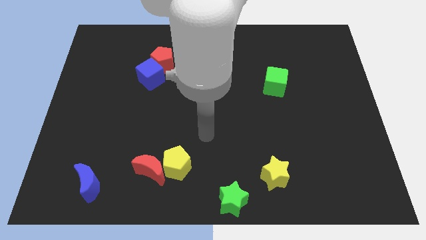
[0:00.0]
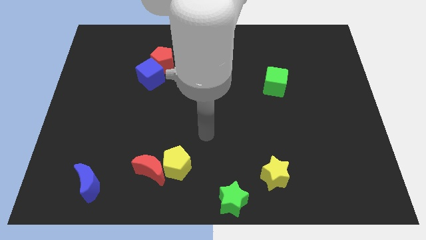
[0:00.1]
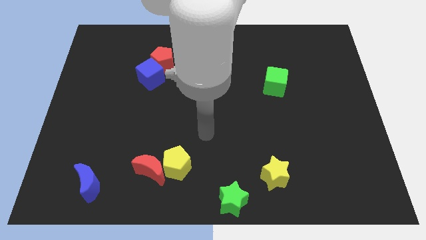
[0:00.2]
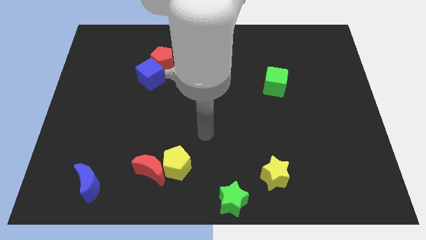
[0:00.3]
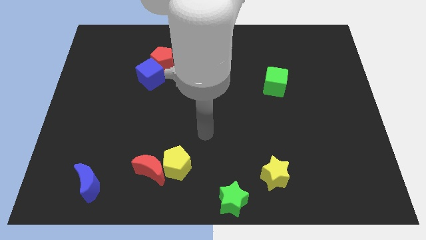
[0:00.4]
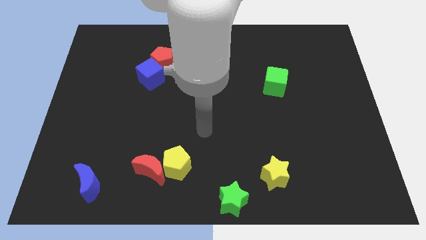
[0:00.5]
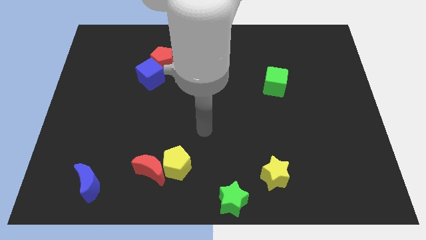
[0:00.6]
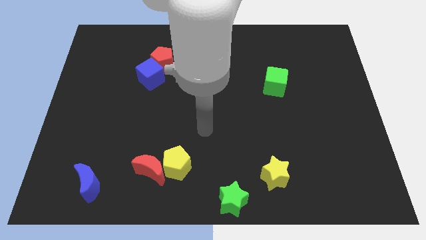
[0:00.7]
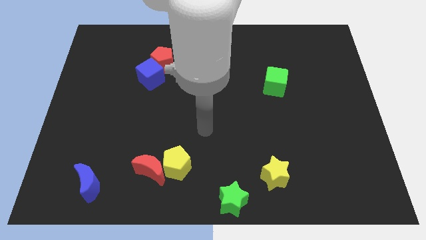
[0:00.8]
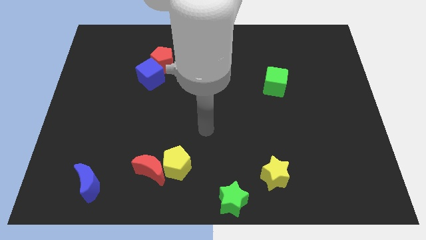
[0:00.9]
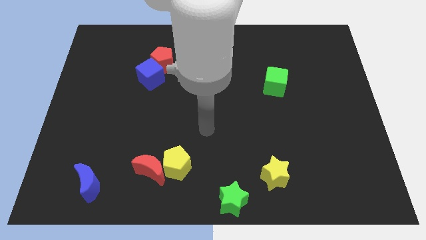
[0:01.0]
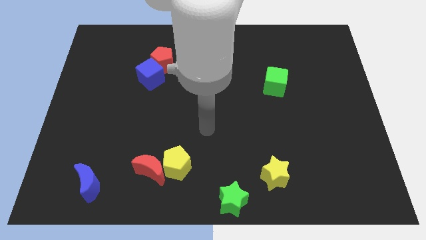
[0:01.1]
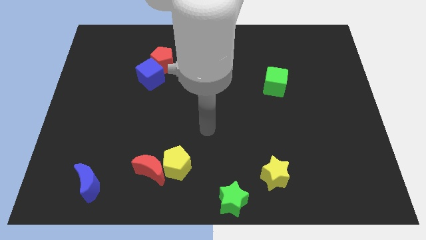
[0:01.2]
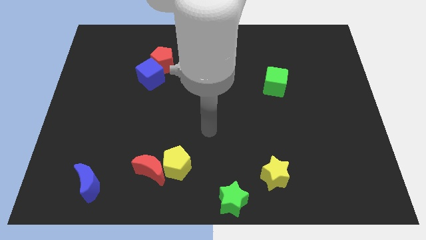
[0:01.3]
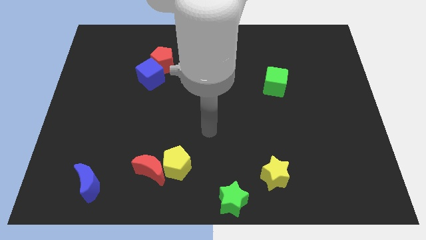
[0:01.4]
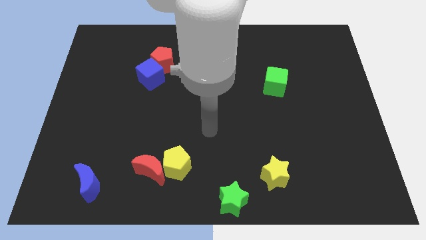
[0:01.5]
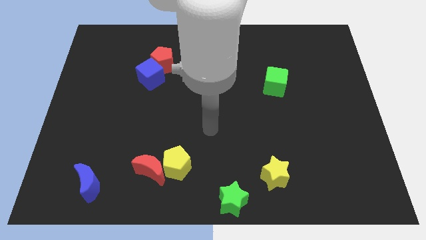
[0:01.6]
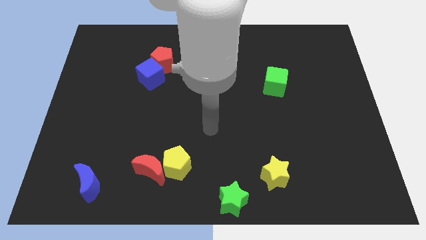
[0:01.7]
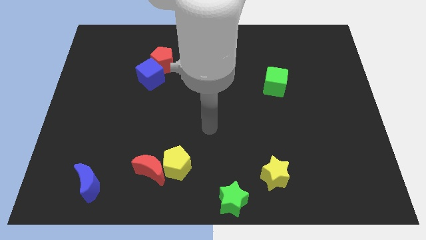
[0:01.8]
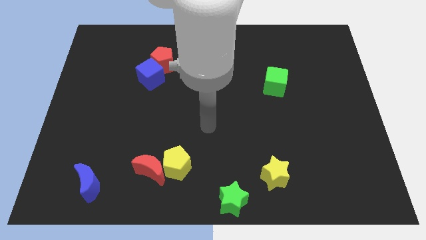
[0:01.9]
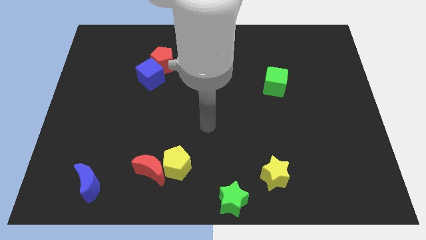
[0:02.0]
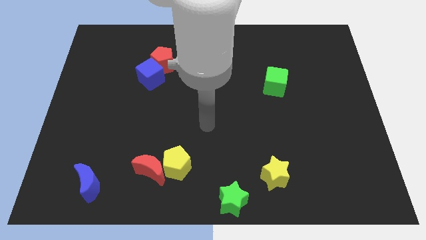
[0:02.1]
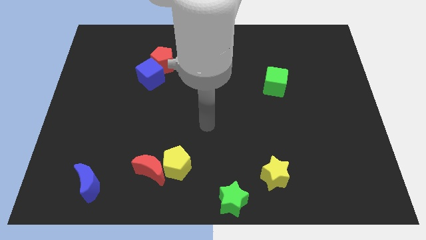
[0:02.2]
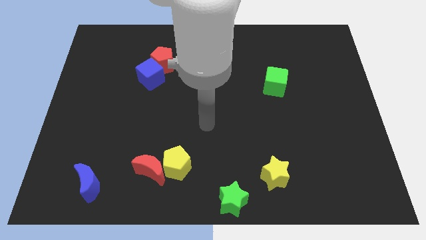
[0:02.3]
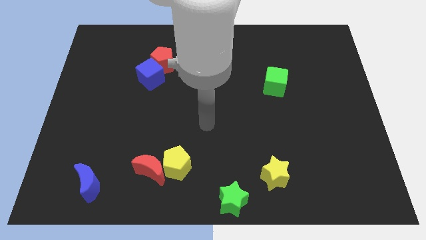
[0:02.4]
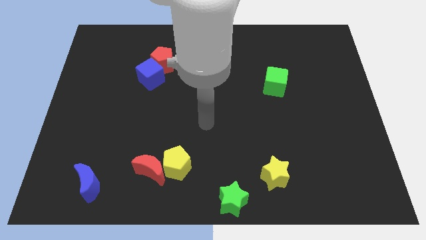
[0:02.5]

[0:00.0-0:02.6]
point the arm at the center of the board

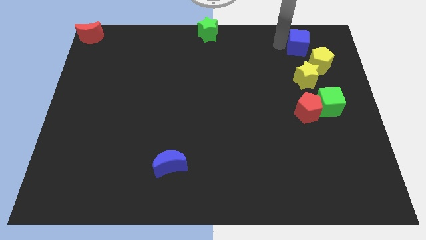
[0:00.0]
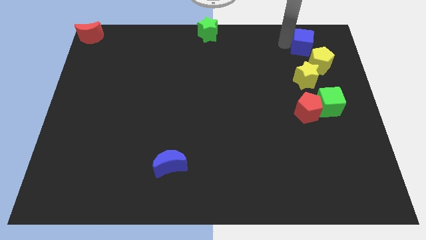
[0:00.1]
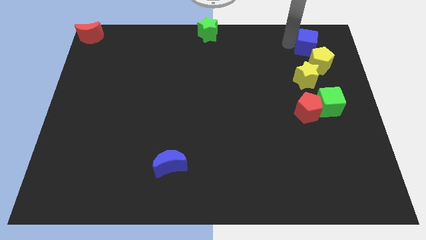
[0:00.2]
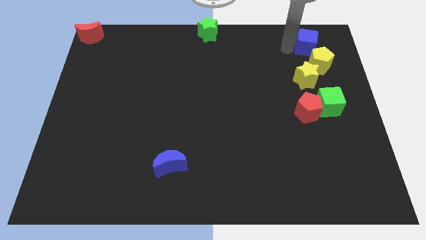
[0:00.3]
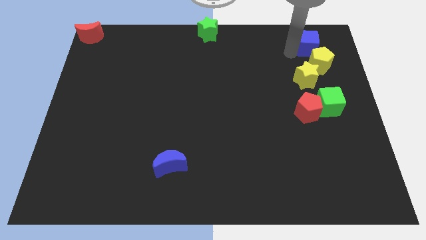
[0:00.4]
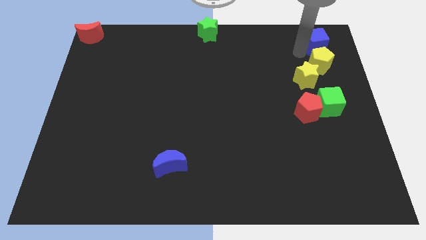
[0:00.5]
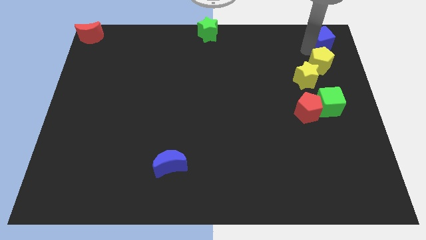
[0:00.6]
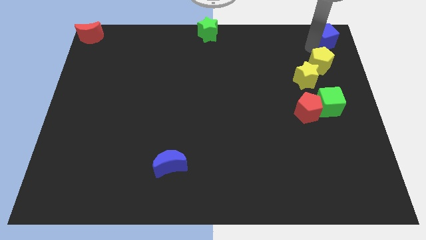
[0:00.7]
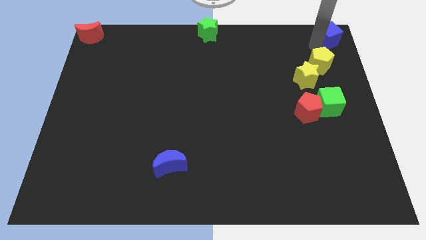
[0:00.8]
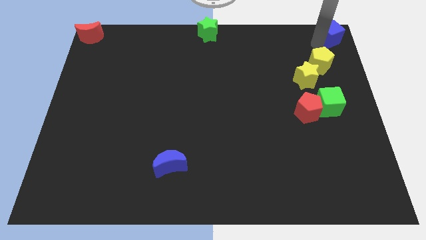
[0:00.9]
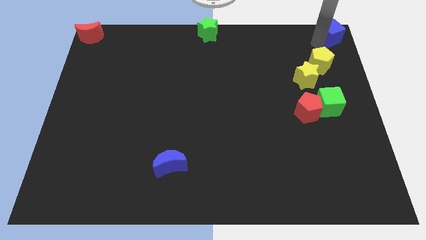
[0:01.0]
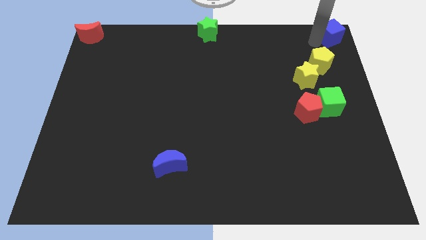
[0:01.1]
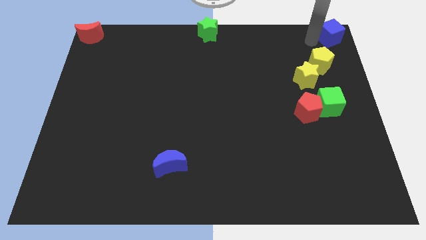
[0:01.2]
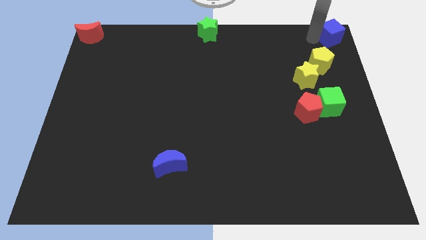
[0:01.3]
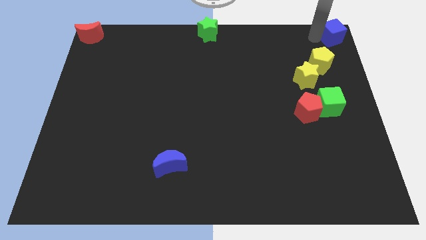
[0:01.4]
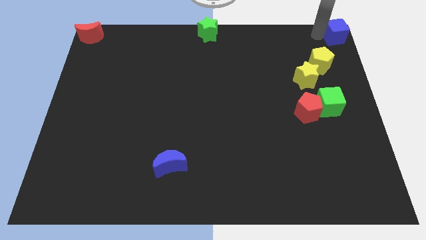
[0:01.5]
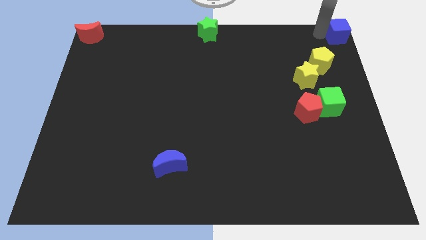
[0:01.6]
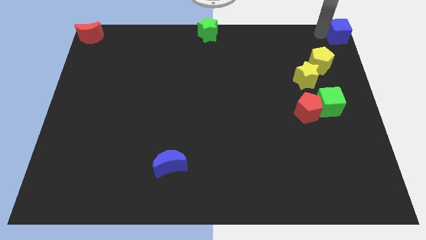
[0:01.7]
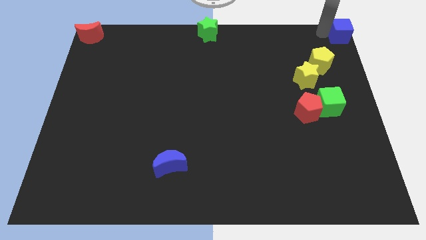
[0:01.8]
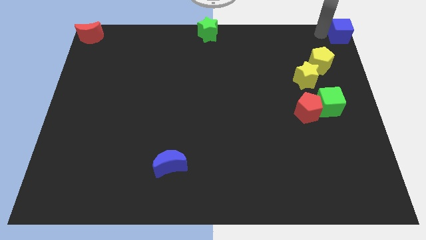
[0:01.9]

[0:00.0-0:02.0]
push the blue cube to the top right side of the board

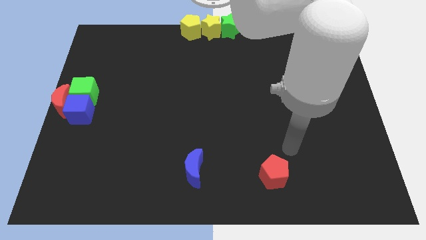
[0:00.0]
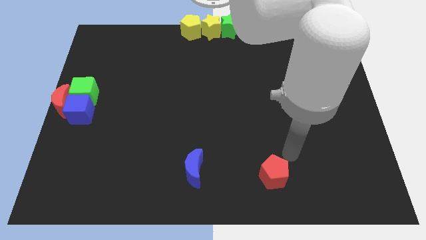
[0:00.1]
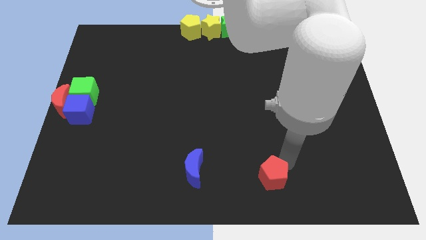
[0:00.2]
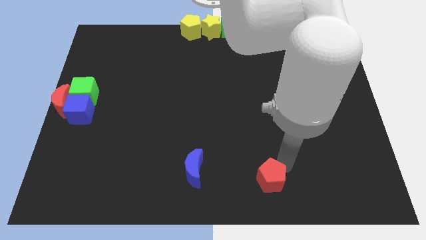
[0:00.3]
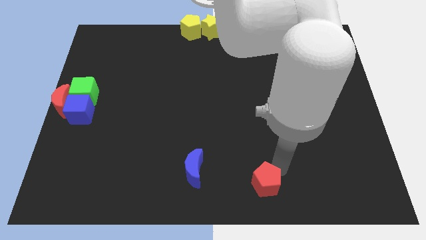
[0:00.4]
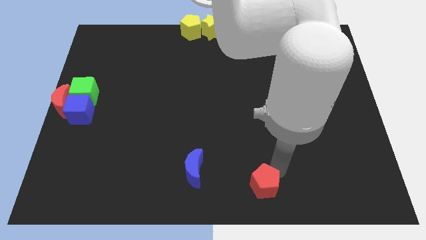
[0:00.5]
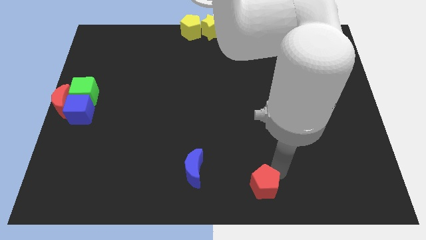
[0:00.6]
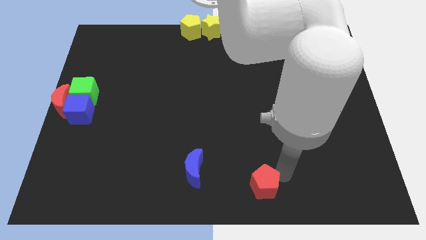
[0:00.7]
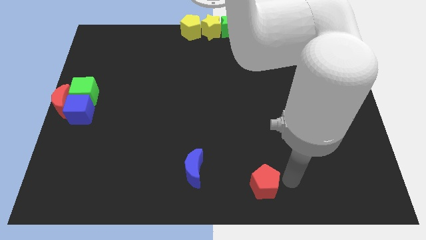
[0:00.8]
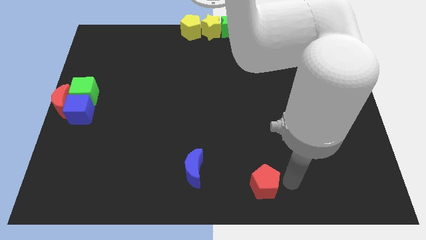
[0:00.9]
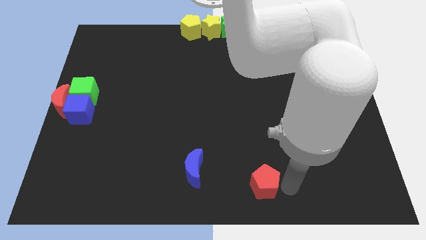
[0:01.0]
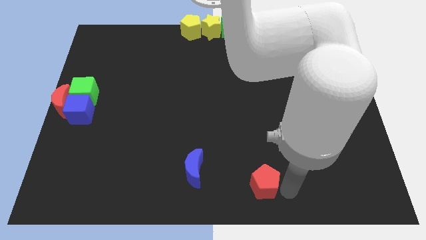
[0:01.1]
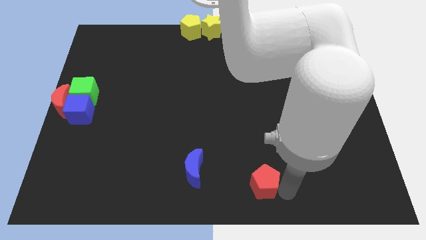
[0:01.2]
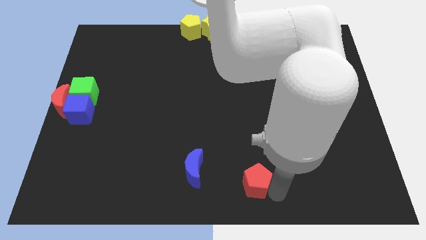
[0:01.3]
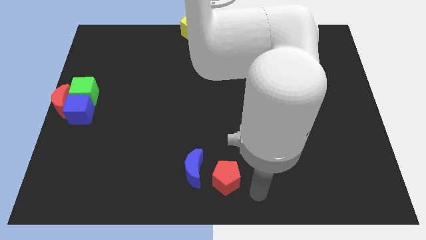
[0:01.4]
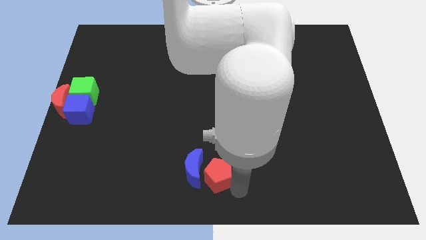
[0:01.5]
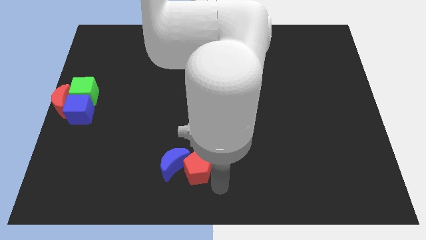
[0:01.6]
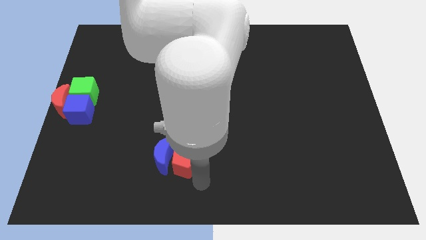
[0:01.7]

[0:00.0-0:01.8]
move the red pentagon into the blue moon

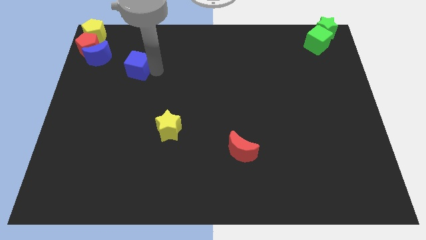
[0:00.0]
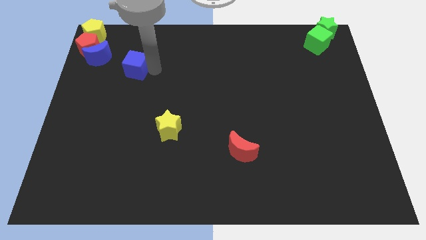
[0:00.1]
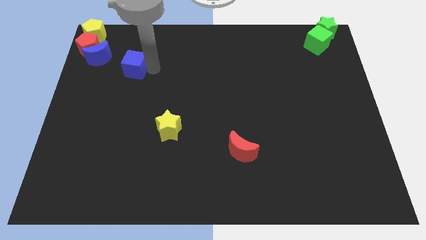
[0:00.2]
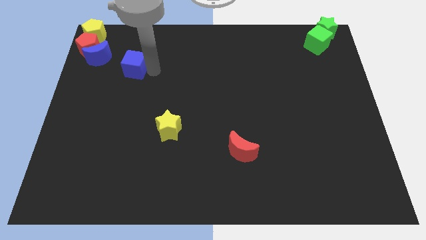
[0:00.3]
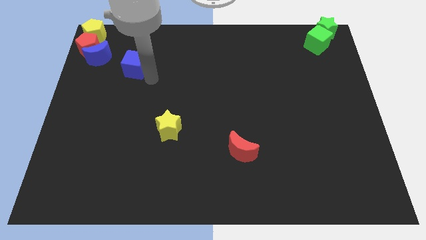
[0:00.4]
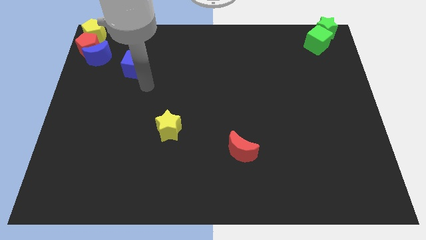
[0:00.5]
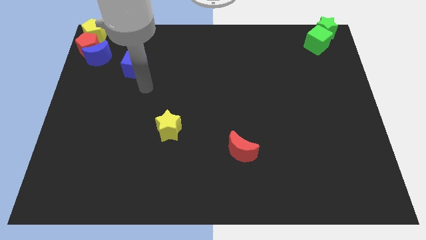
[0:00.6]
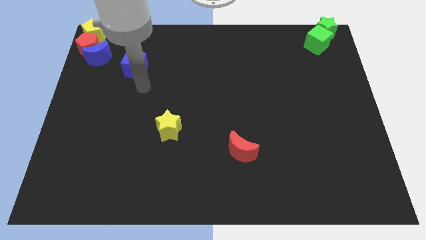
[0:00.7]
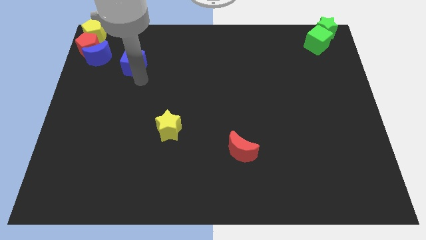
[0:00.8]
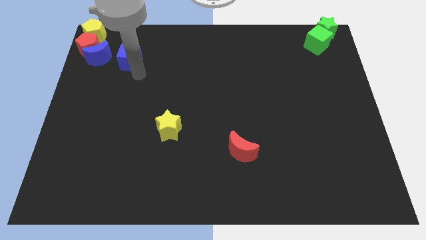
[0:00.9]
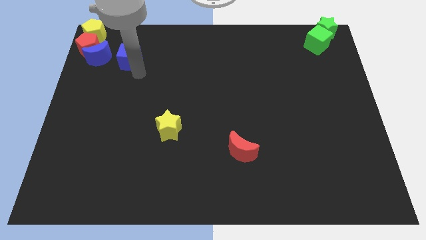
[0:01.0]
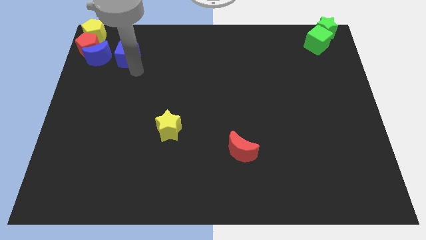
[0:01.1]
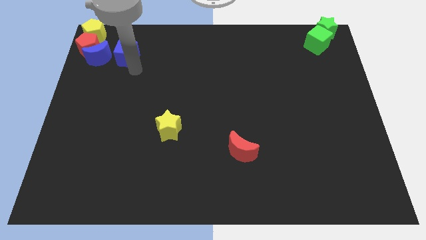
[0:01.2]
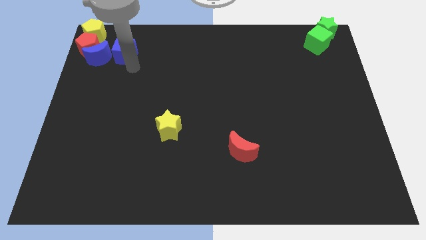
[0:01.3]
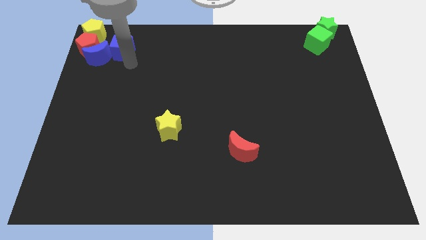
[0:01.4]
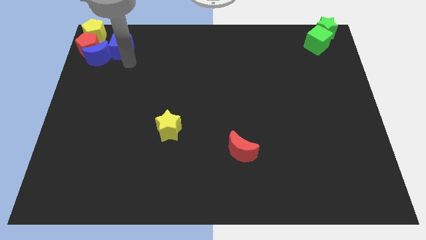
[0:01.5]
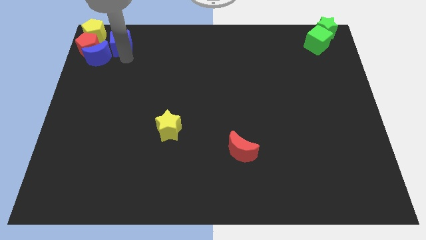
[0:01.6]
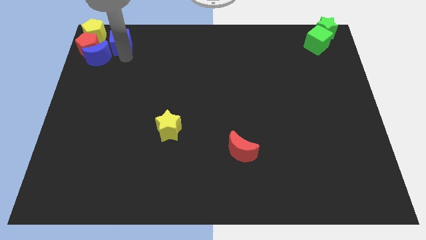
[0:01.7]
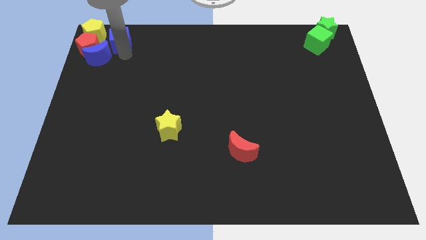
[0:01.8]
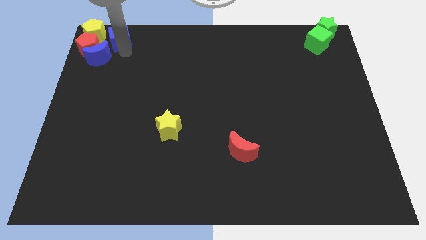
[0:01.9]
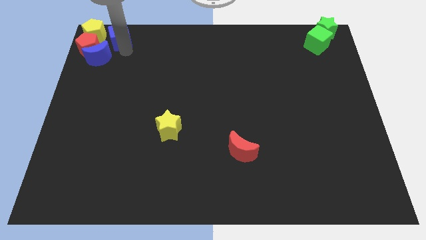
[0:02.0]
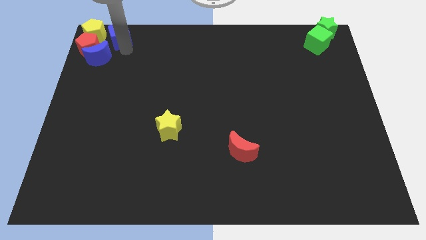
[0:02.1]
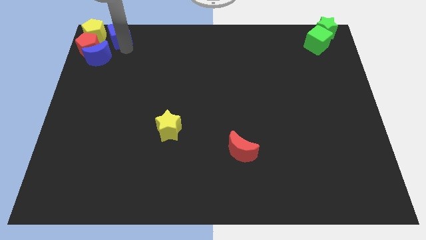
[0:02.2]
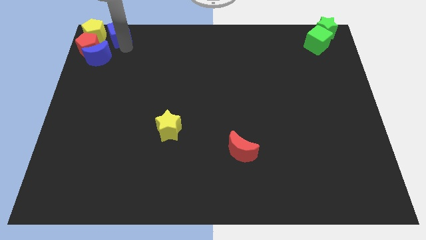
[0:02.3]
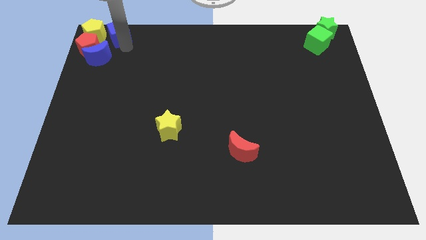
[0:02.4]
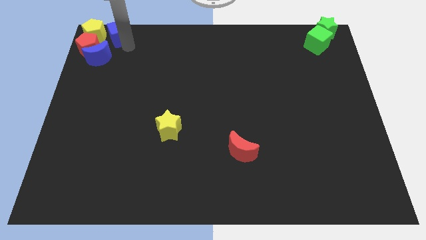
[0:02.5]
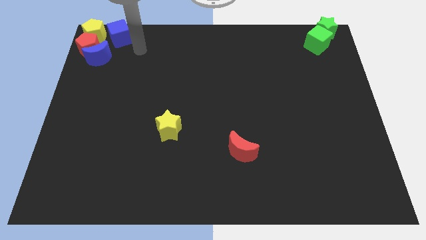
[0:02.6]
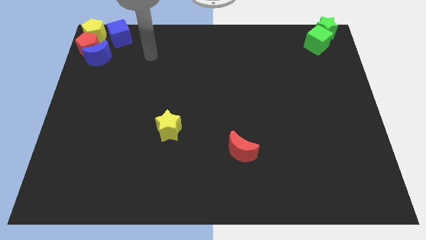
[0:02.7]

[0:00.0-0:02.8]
move the blue cube at the right side of the group of blocks
